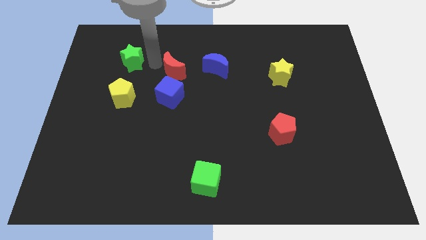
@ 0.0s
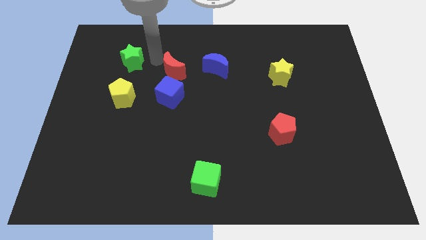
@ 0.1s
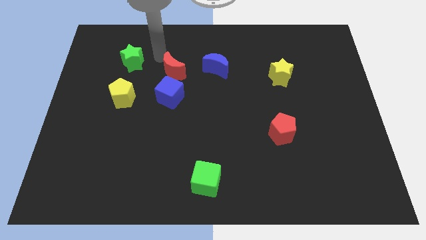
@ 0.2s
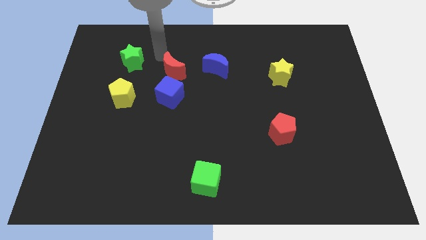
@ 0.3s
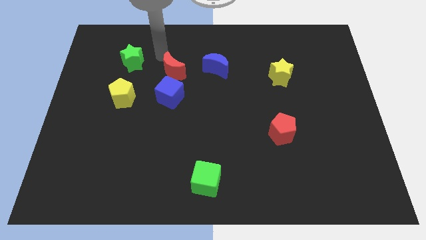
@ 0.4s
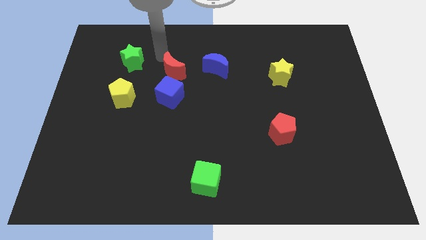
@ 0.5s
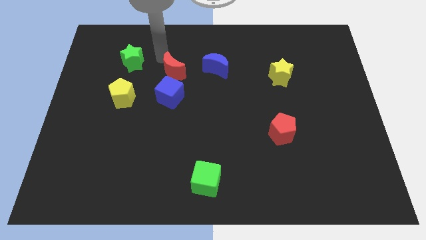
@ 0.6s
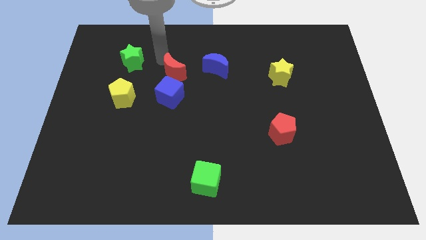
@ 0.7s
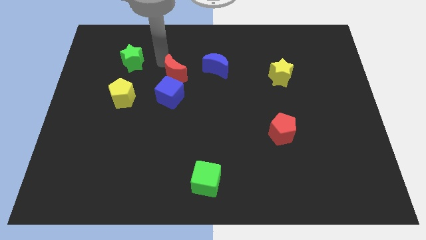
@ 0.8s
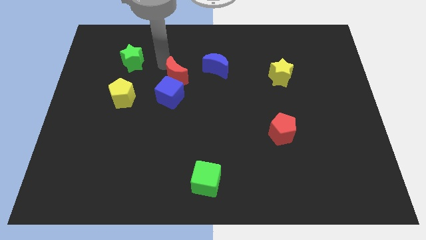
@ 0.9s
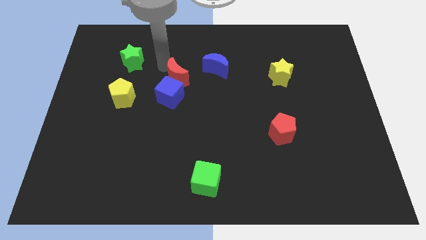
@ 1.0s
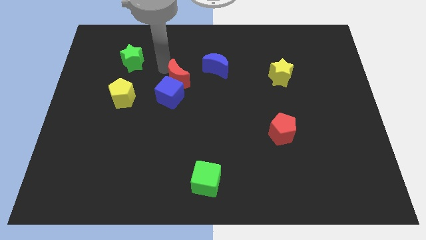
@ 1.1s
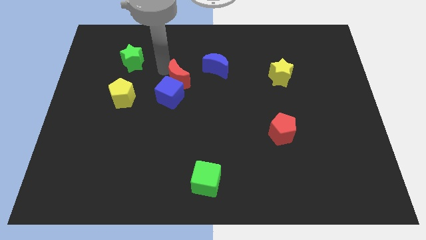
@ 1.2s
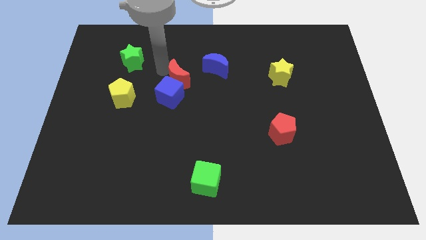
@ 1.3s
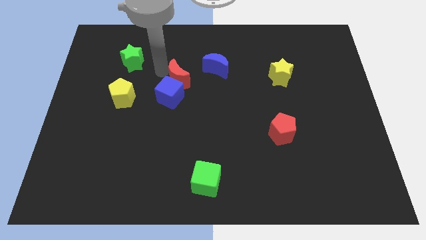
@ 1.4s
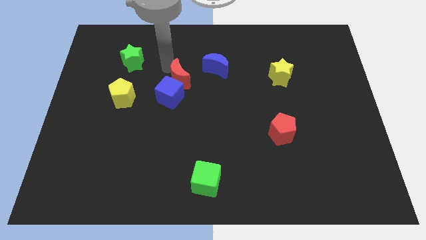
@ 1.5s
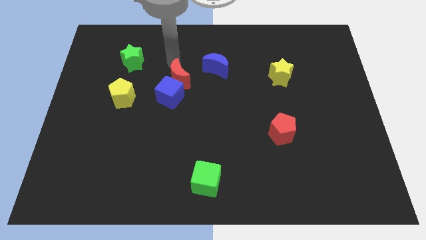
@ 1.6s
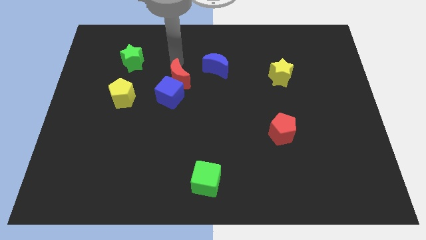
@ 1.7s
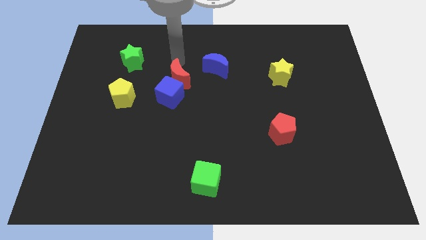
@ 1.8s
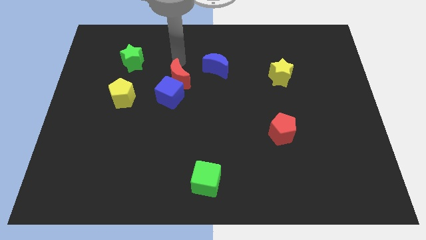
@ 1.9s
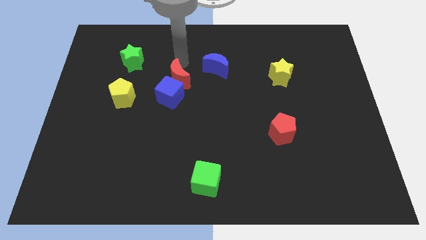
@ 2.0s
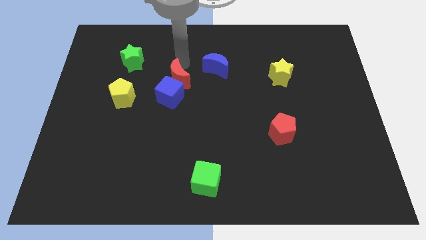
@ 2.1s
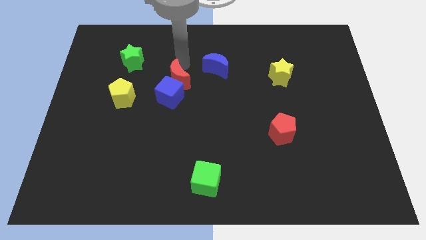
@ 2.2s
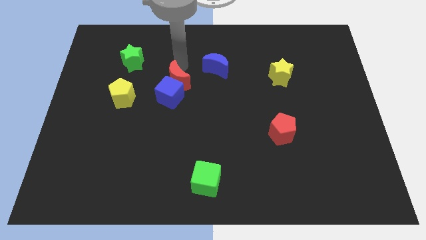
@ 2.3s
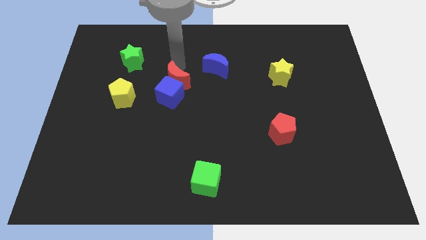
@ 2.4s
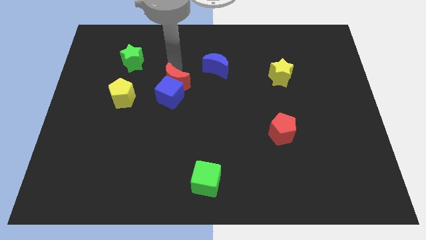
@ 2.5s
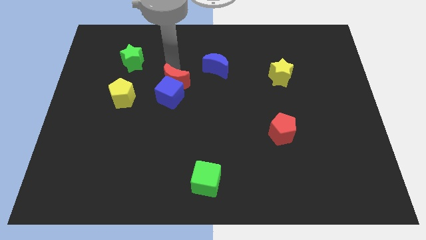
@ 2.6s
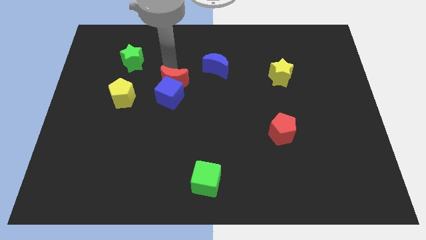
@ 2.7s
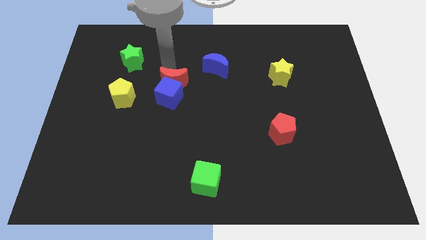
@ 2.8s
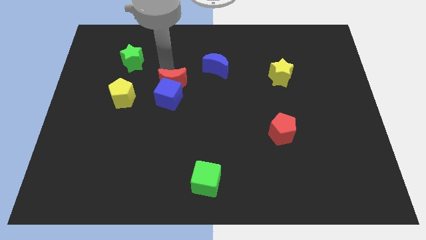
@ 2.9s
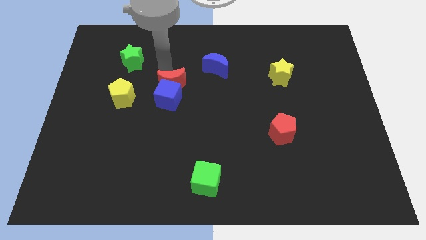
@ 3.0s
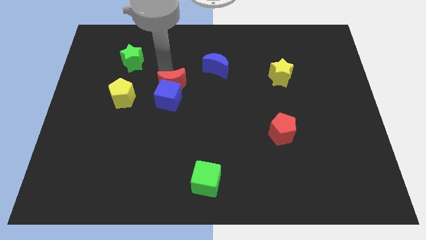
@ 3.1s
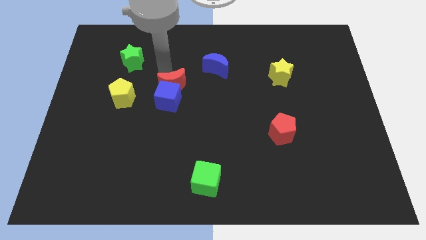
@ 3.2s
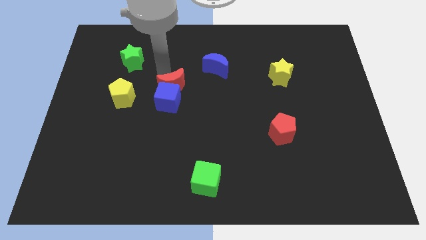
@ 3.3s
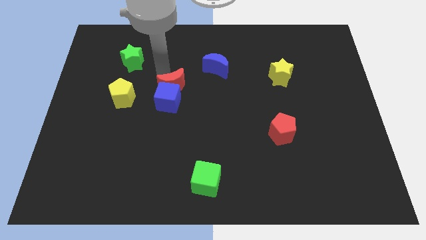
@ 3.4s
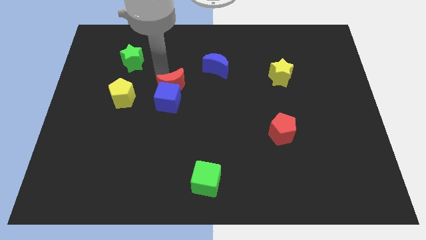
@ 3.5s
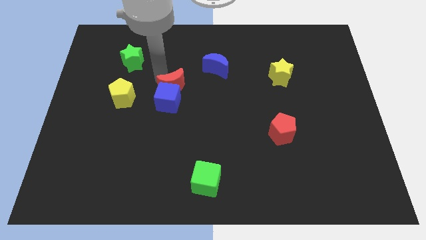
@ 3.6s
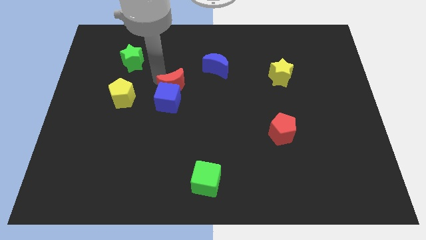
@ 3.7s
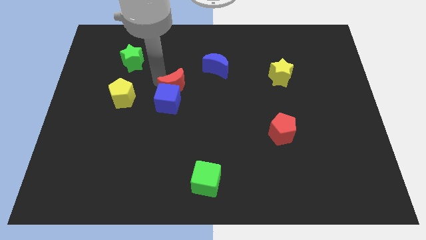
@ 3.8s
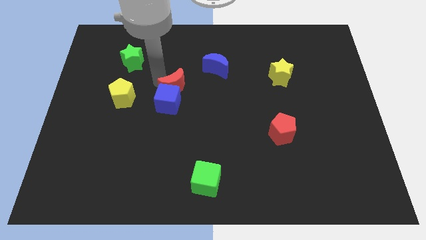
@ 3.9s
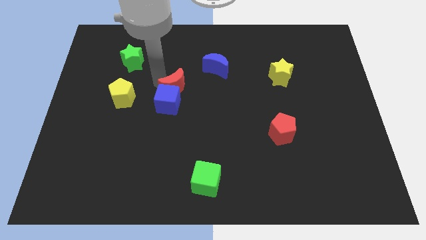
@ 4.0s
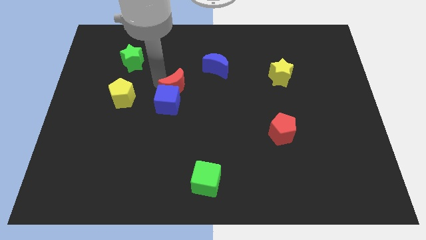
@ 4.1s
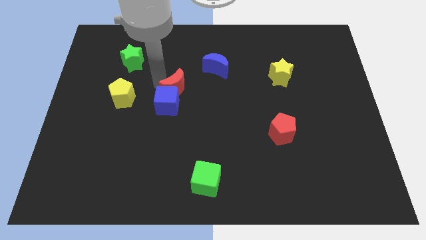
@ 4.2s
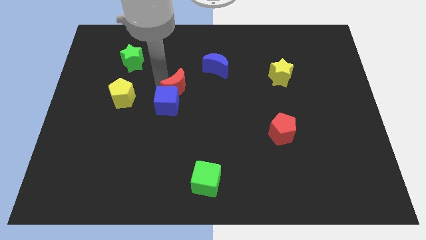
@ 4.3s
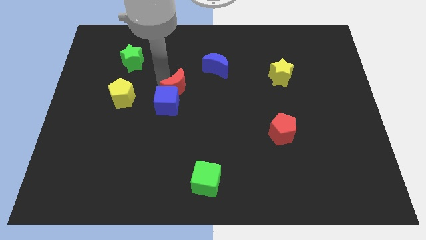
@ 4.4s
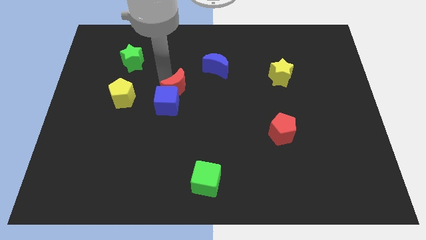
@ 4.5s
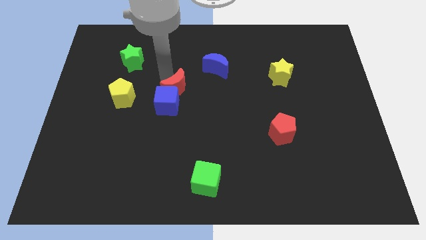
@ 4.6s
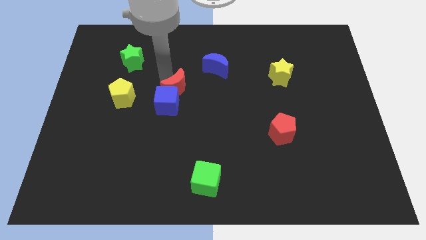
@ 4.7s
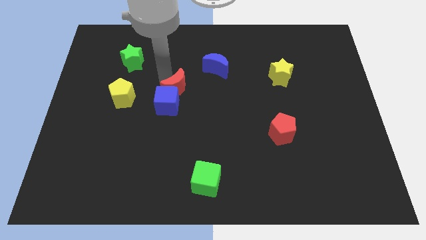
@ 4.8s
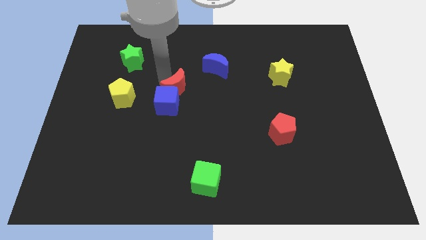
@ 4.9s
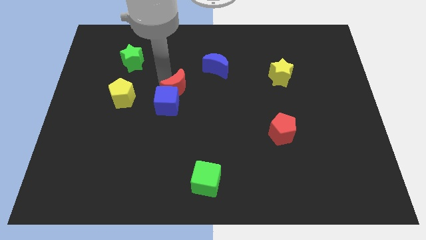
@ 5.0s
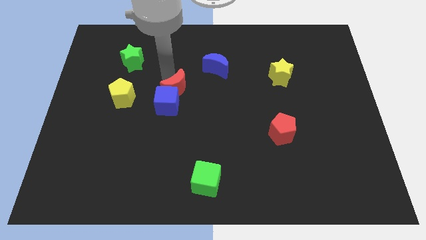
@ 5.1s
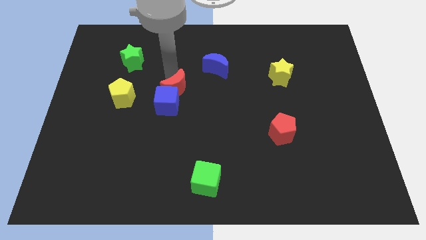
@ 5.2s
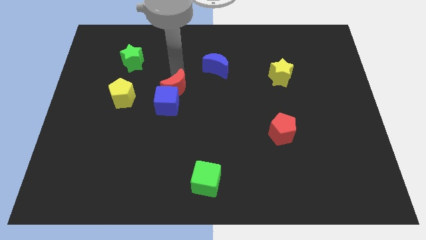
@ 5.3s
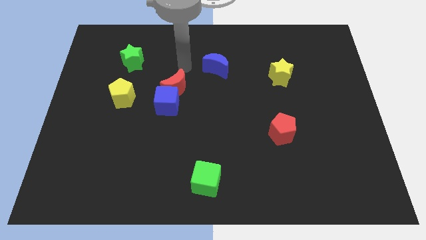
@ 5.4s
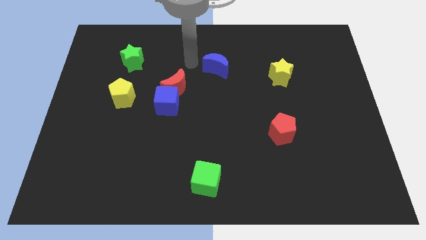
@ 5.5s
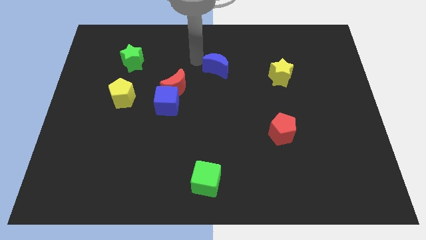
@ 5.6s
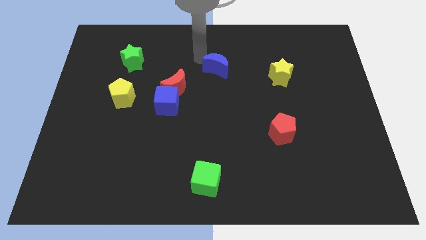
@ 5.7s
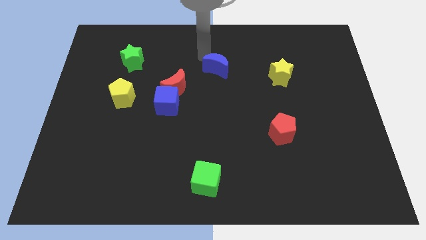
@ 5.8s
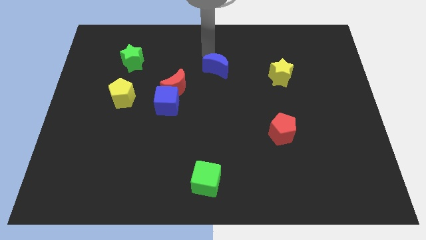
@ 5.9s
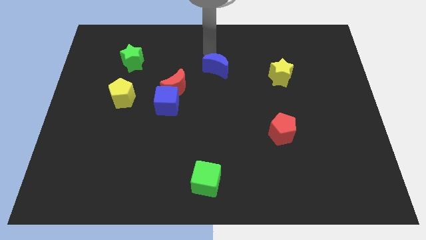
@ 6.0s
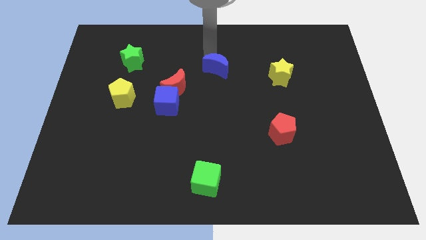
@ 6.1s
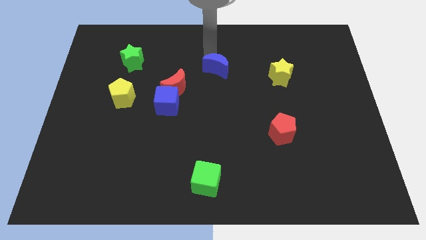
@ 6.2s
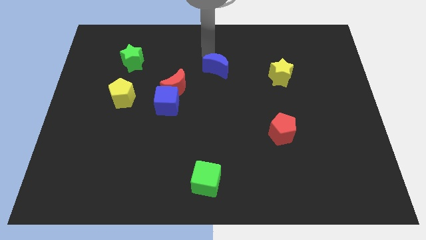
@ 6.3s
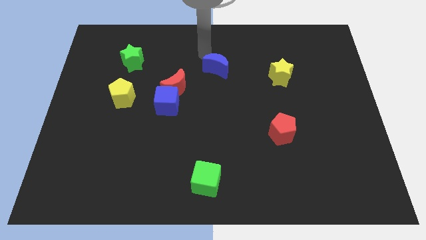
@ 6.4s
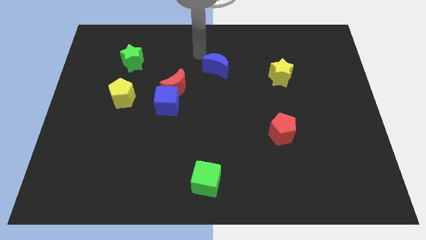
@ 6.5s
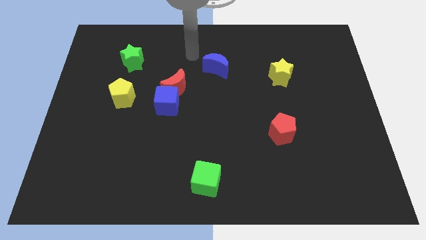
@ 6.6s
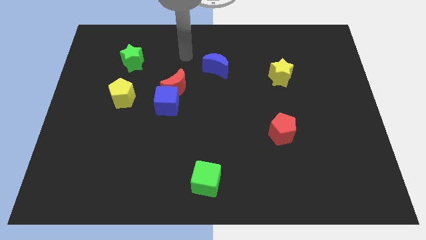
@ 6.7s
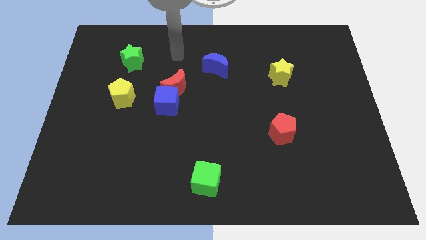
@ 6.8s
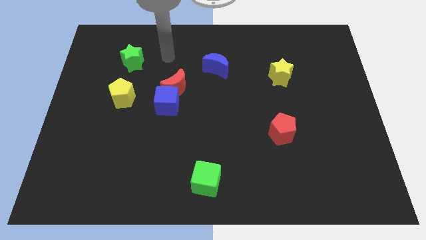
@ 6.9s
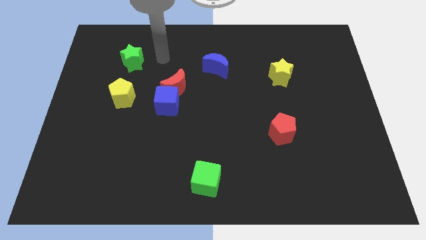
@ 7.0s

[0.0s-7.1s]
move the red crescent and the blue cube slightly to the bottom

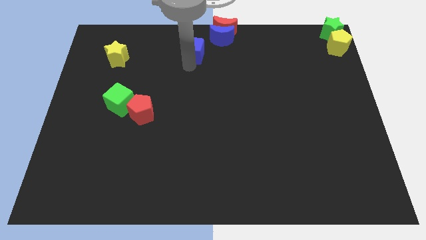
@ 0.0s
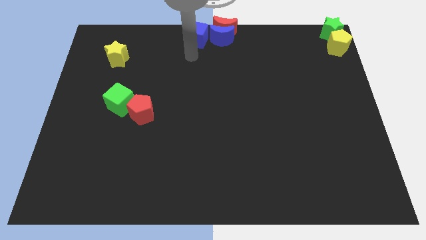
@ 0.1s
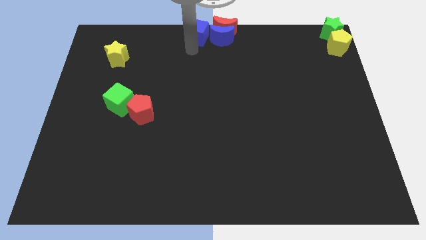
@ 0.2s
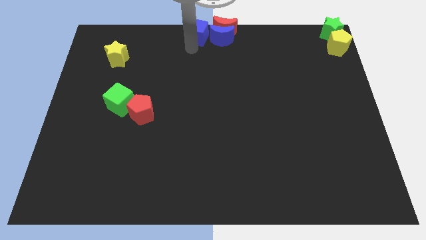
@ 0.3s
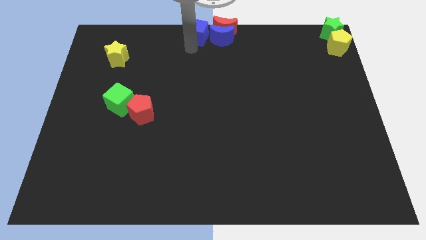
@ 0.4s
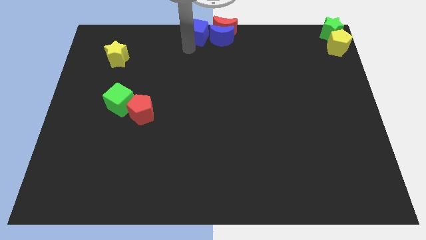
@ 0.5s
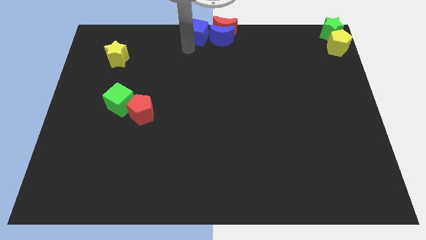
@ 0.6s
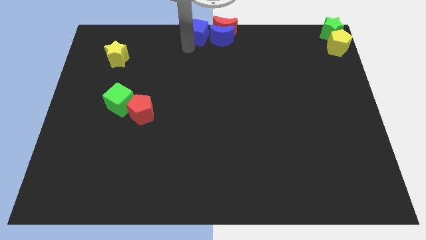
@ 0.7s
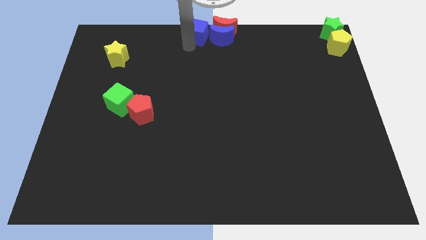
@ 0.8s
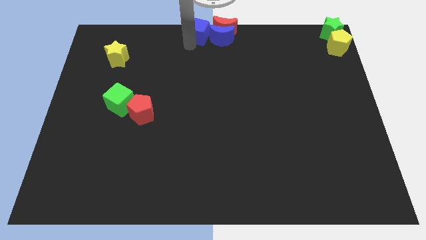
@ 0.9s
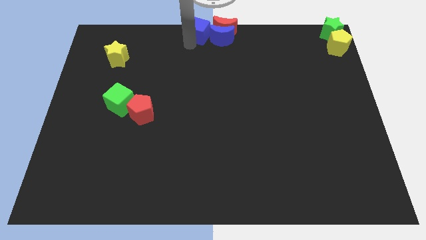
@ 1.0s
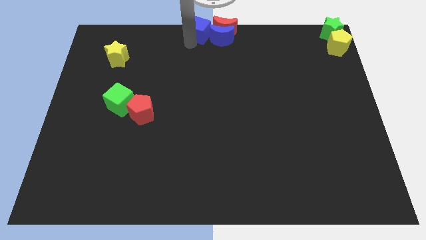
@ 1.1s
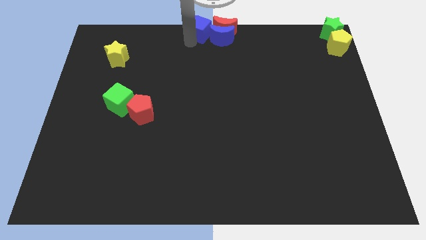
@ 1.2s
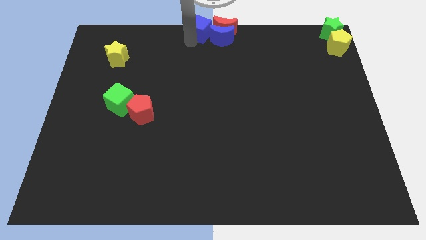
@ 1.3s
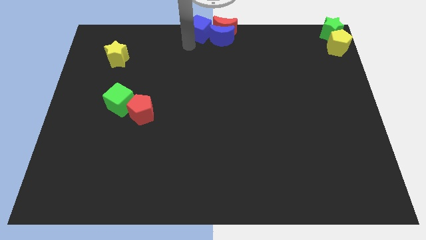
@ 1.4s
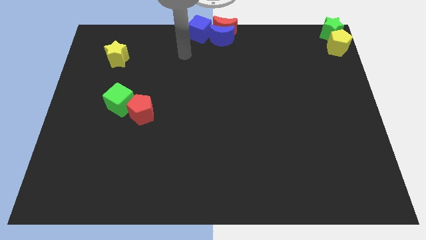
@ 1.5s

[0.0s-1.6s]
push the blue cube to the top center of the board

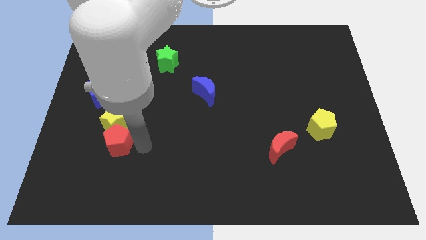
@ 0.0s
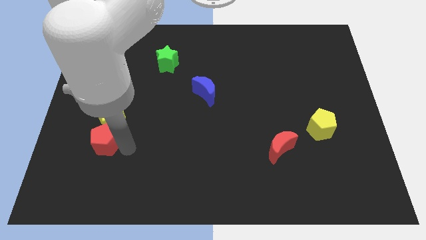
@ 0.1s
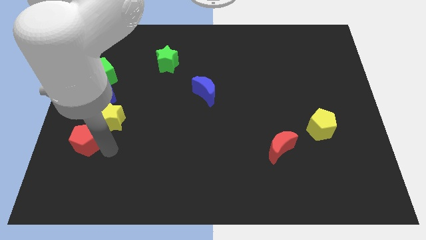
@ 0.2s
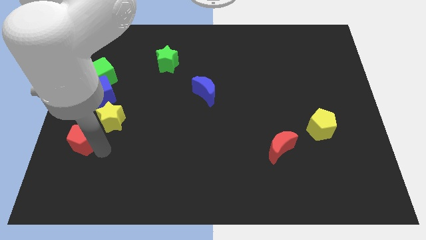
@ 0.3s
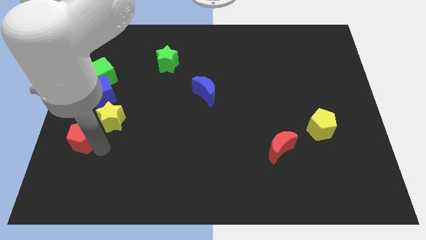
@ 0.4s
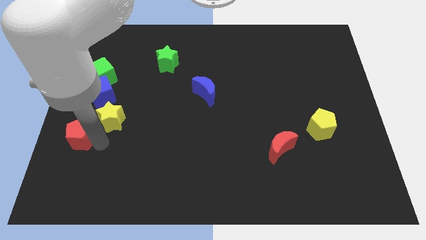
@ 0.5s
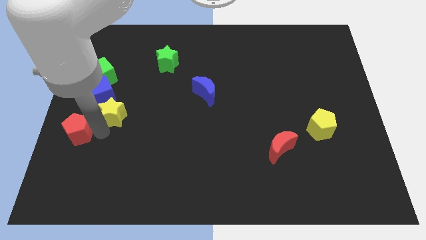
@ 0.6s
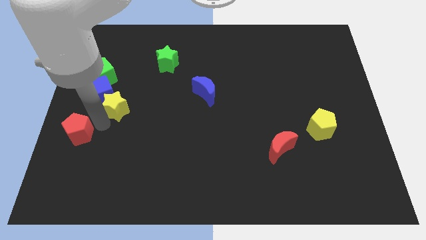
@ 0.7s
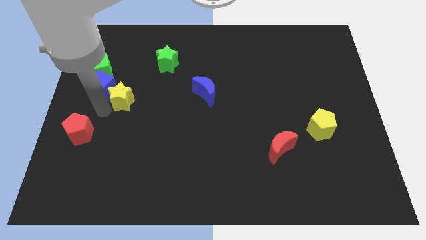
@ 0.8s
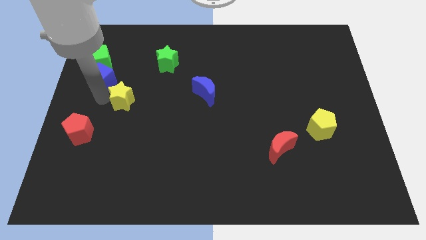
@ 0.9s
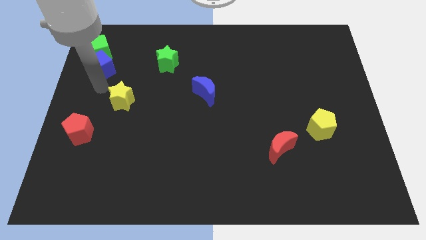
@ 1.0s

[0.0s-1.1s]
separate yellow star and red pentagon
